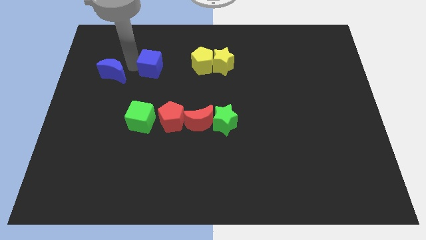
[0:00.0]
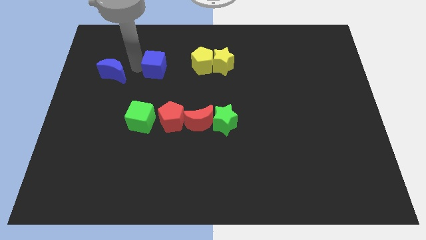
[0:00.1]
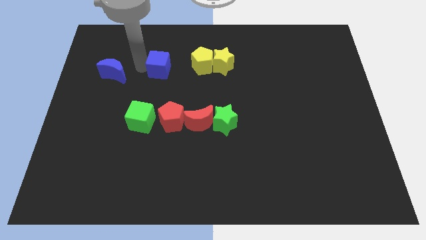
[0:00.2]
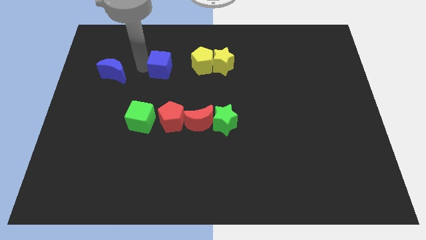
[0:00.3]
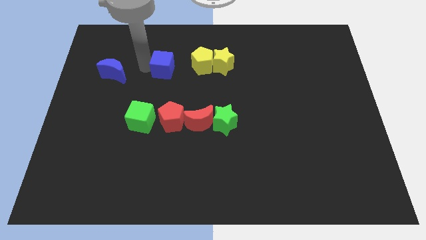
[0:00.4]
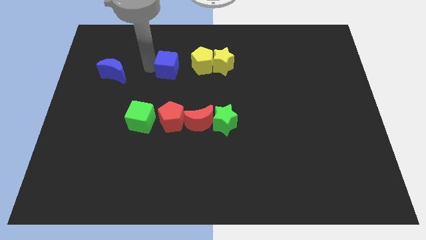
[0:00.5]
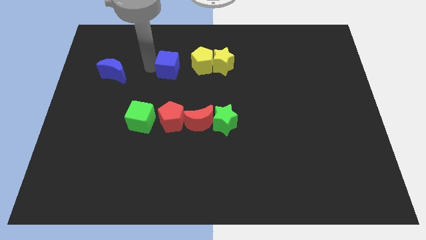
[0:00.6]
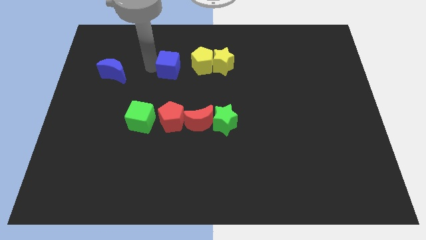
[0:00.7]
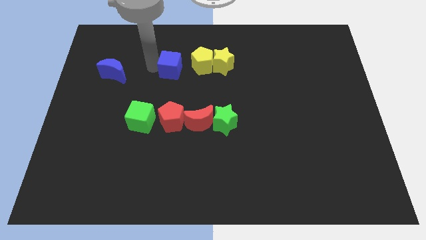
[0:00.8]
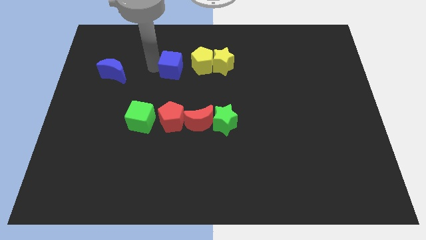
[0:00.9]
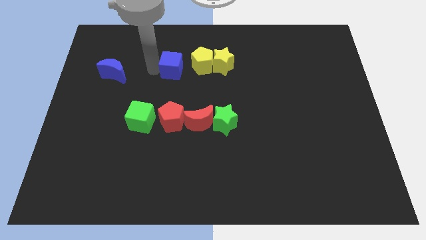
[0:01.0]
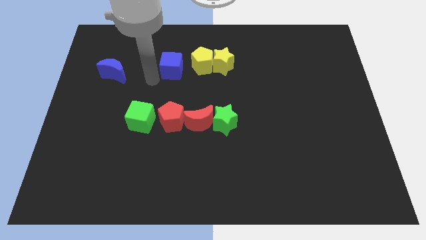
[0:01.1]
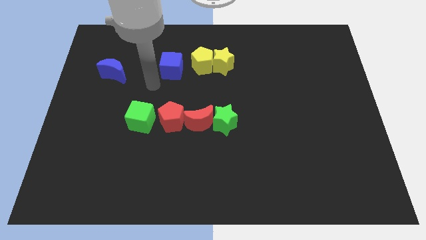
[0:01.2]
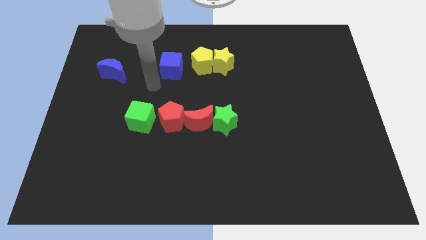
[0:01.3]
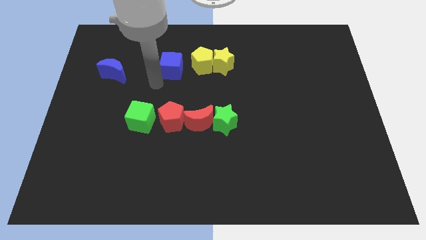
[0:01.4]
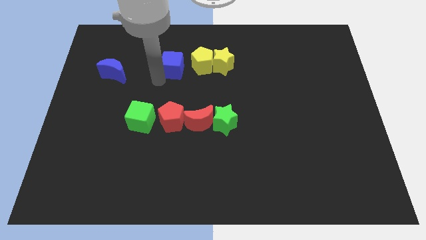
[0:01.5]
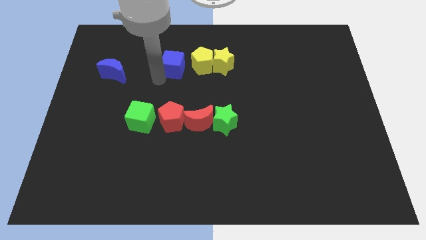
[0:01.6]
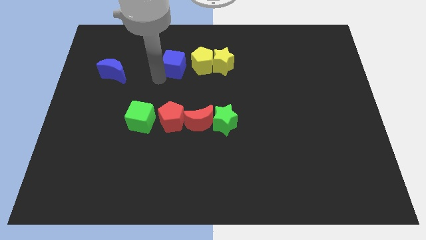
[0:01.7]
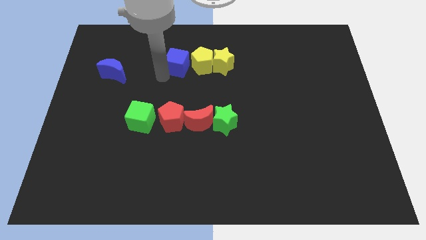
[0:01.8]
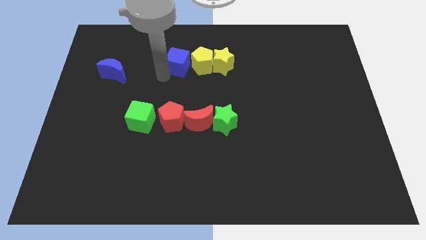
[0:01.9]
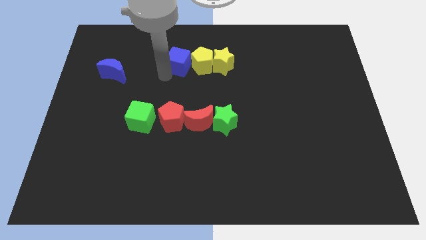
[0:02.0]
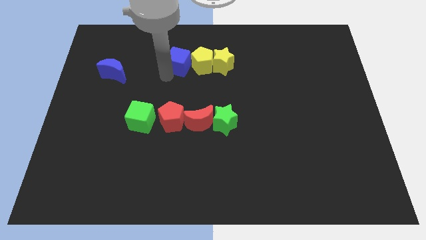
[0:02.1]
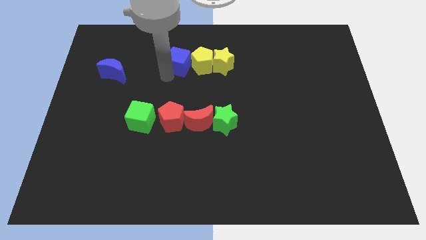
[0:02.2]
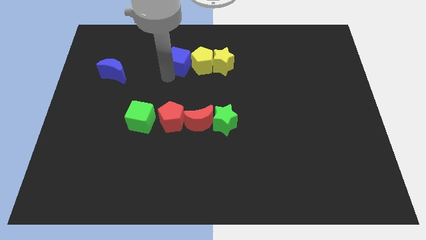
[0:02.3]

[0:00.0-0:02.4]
slide blue cube to the left of the yellow pentagon

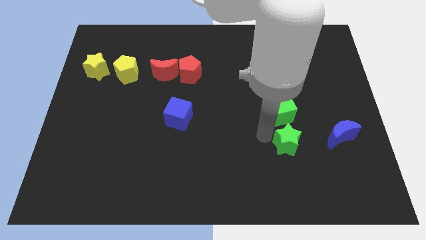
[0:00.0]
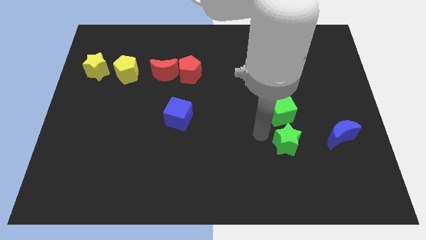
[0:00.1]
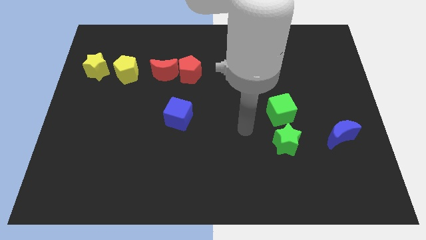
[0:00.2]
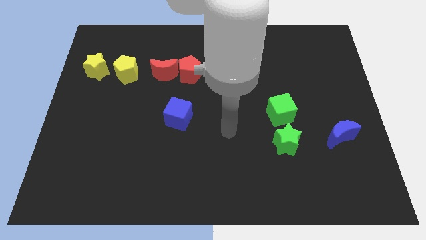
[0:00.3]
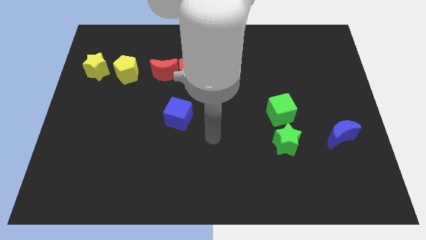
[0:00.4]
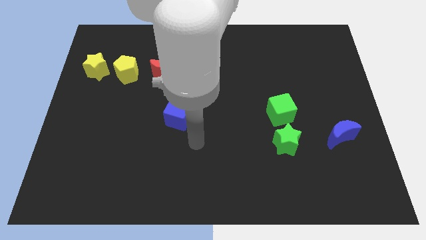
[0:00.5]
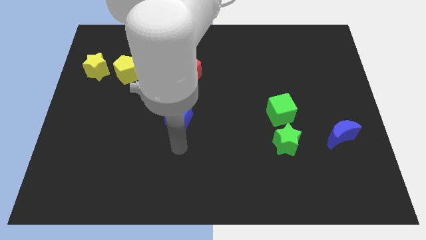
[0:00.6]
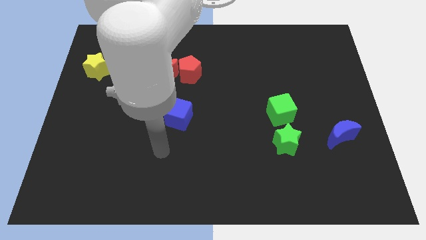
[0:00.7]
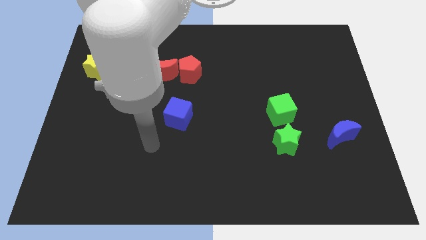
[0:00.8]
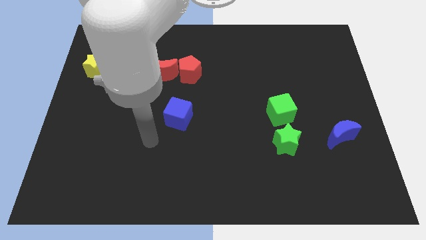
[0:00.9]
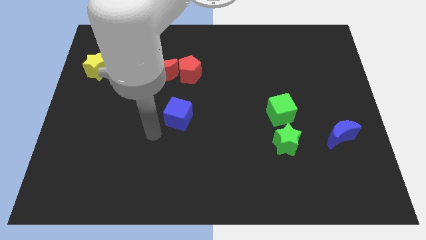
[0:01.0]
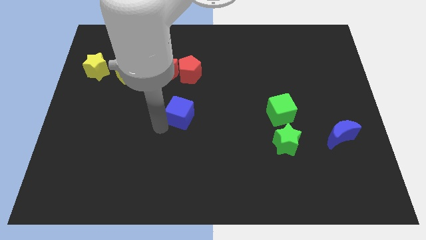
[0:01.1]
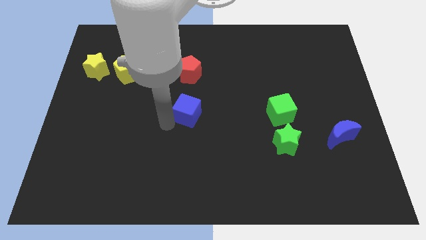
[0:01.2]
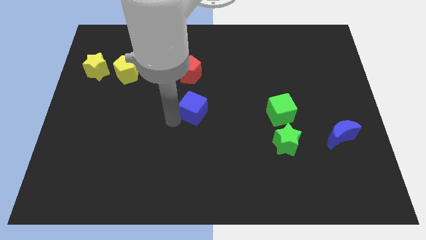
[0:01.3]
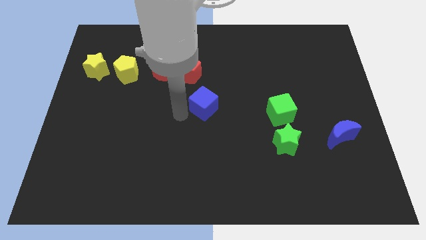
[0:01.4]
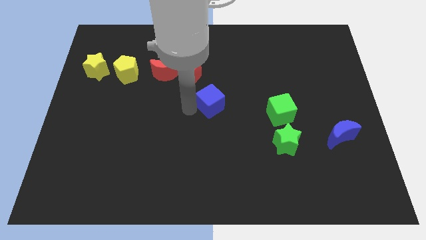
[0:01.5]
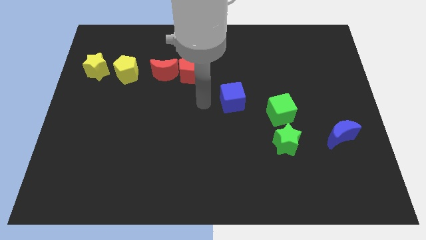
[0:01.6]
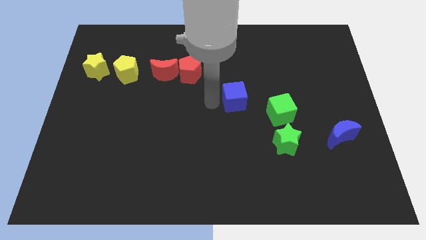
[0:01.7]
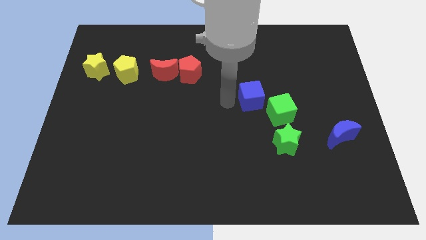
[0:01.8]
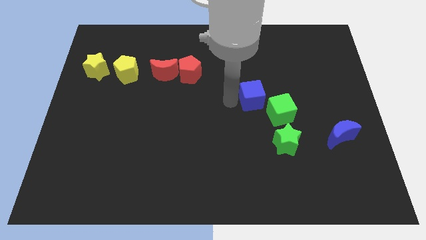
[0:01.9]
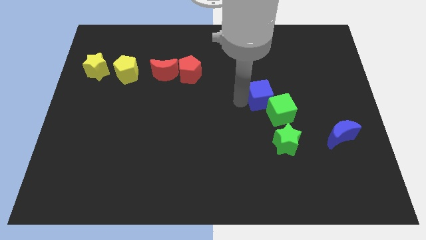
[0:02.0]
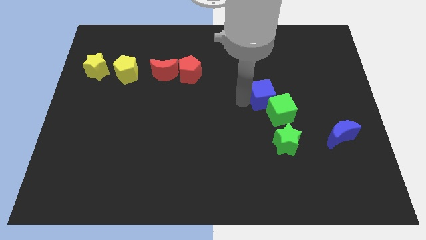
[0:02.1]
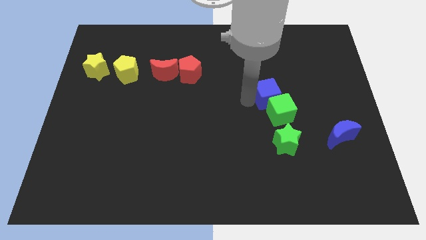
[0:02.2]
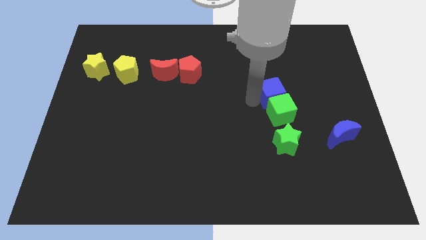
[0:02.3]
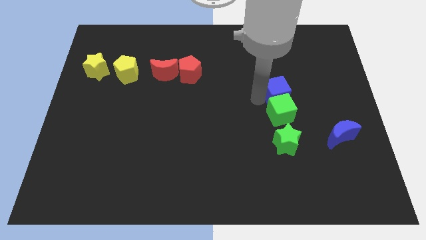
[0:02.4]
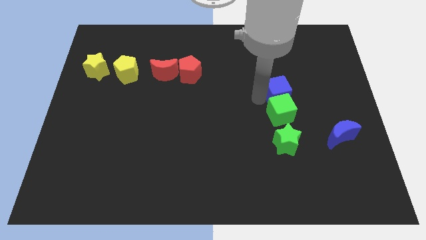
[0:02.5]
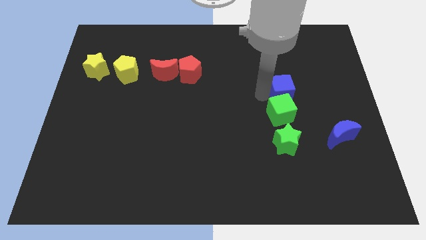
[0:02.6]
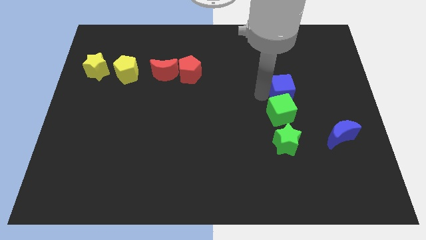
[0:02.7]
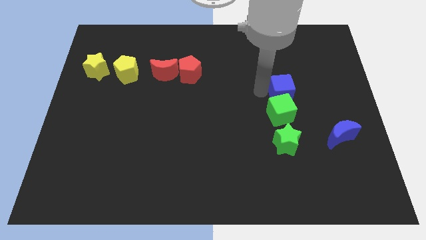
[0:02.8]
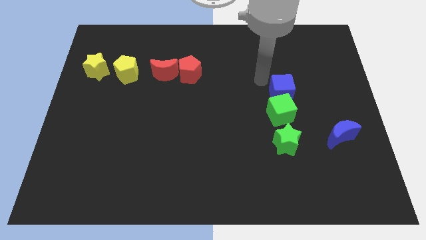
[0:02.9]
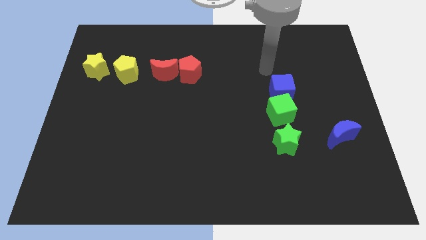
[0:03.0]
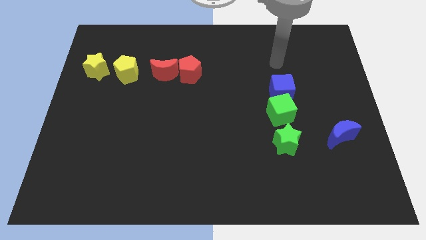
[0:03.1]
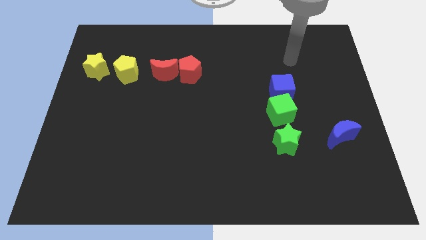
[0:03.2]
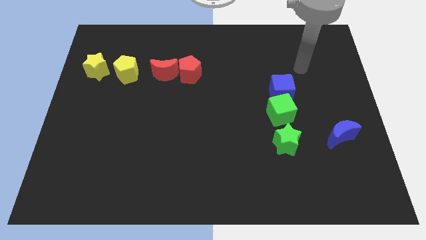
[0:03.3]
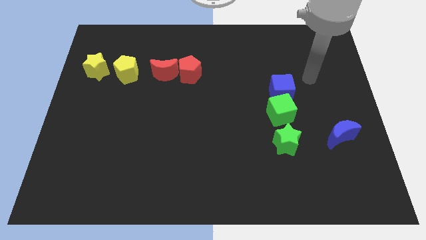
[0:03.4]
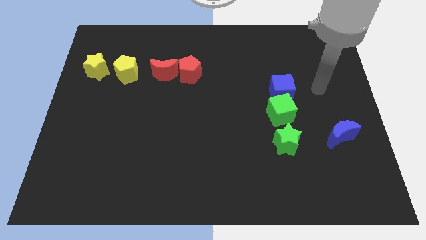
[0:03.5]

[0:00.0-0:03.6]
push the blue cube to the right side of the board

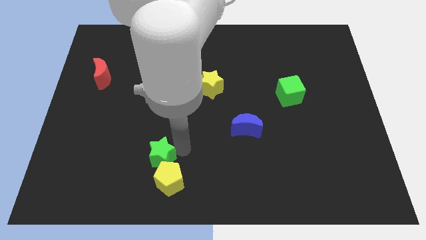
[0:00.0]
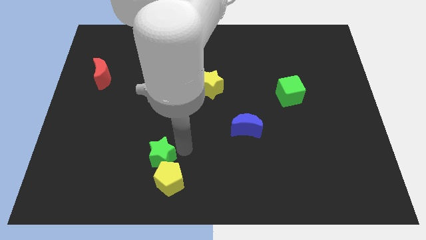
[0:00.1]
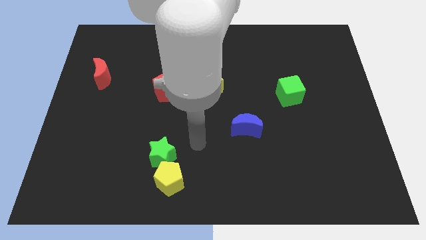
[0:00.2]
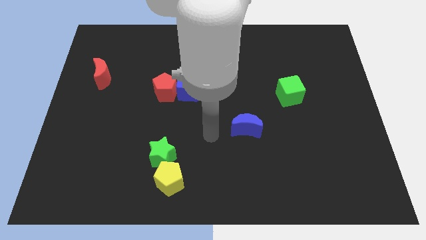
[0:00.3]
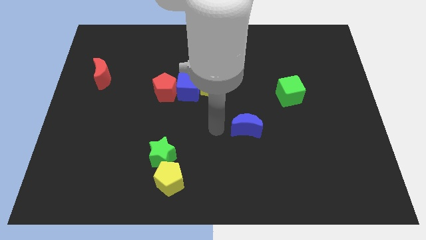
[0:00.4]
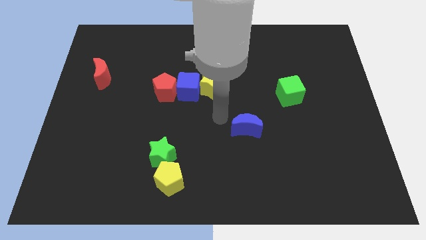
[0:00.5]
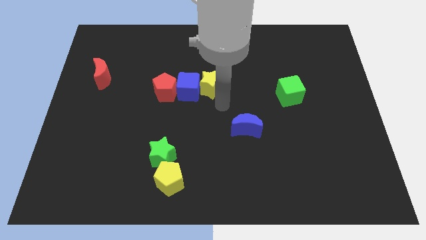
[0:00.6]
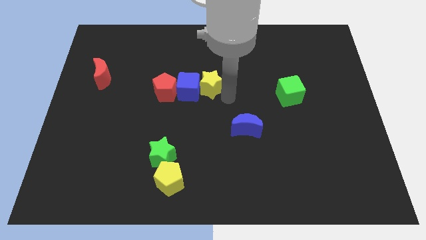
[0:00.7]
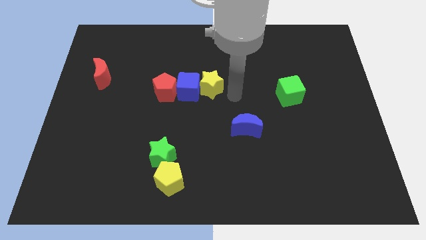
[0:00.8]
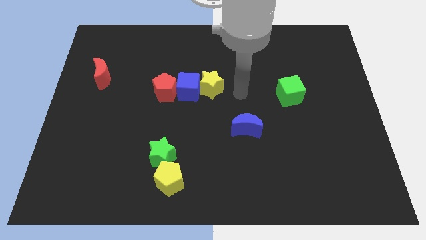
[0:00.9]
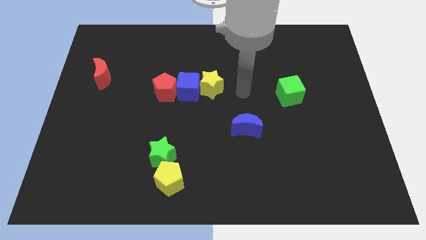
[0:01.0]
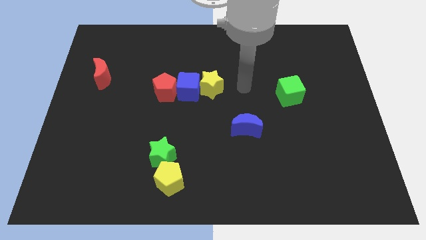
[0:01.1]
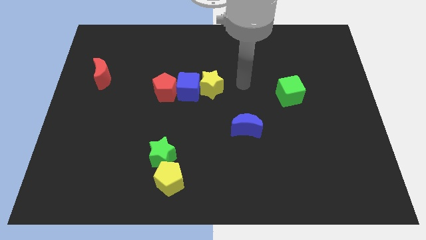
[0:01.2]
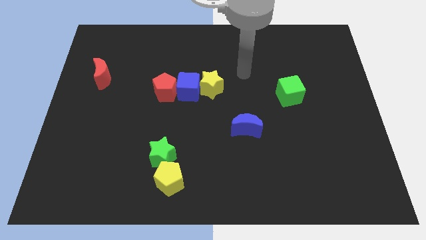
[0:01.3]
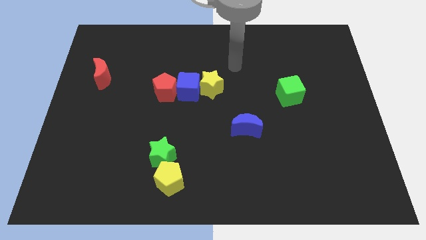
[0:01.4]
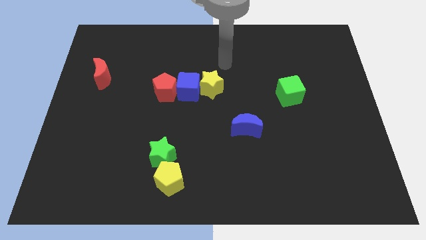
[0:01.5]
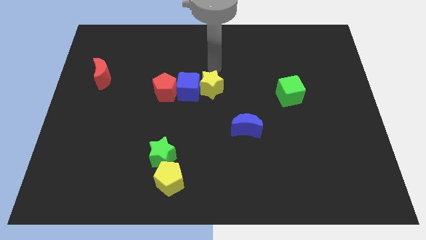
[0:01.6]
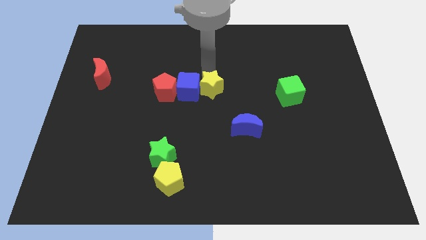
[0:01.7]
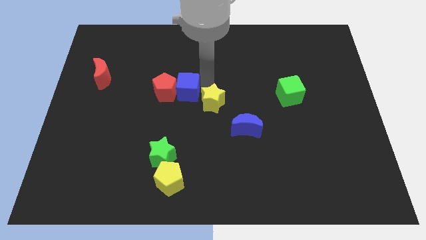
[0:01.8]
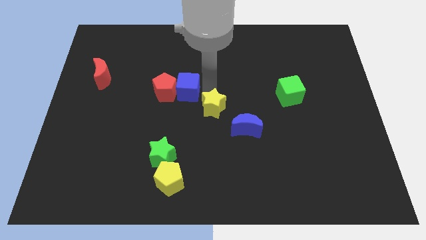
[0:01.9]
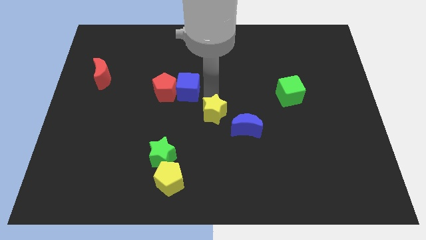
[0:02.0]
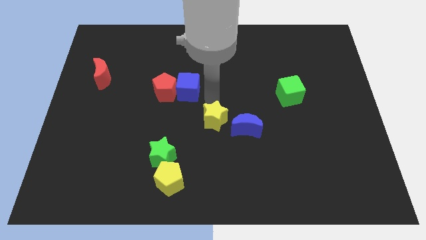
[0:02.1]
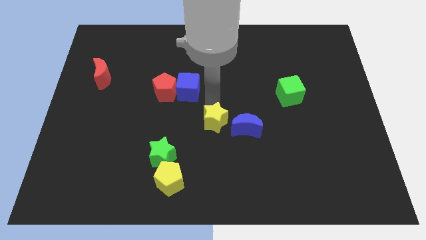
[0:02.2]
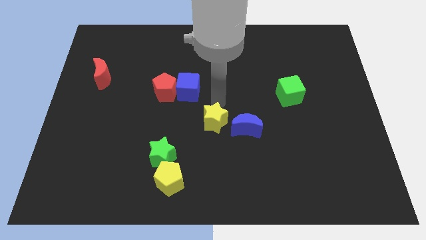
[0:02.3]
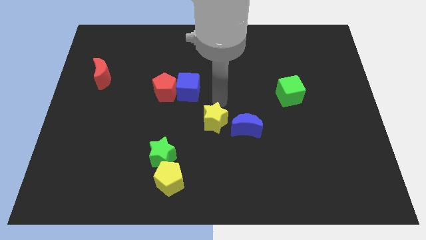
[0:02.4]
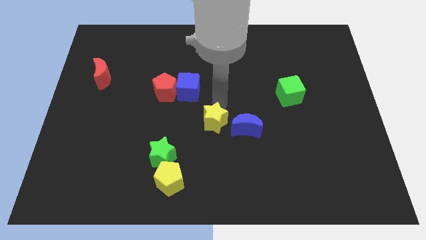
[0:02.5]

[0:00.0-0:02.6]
place yellow star to the center of the board

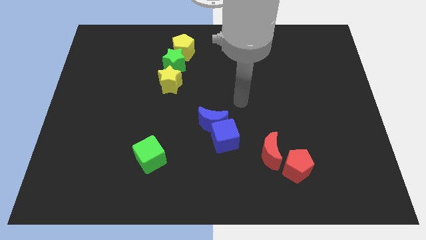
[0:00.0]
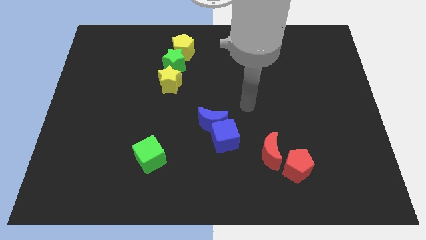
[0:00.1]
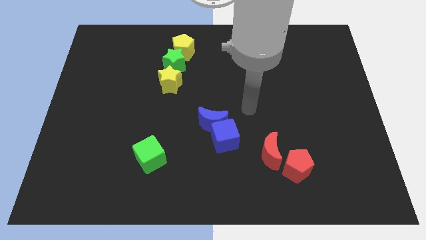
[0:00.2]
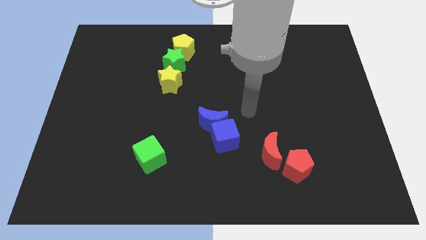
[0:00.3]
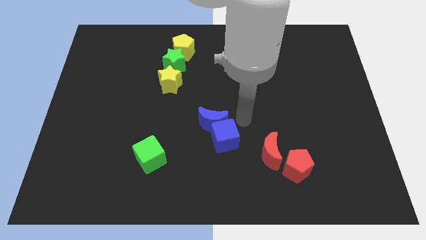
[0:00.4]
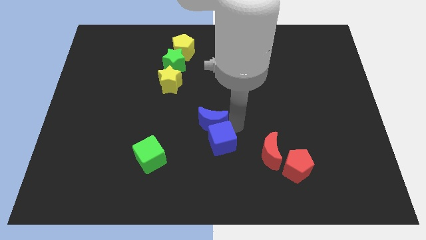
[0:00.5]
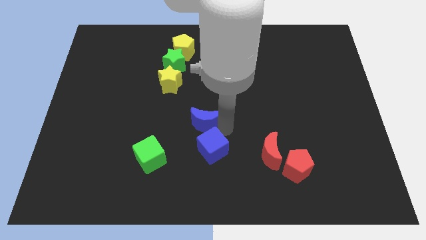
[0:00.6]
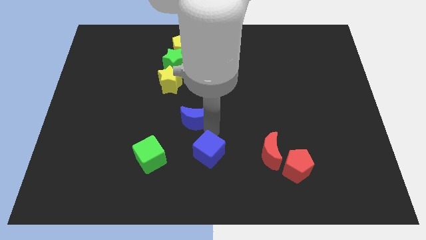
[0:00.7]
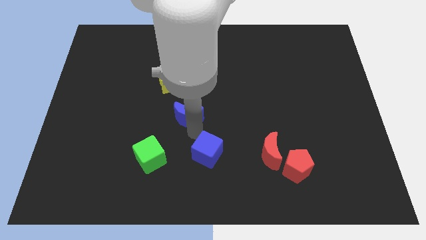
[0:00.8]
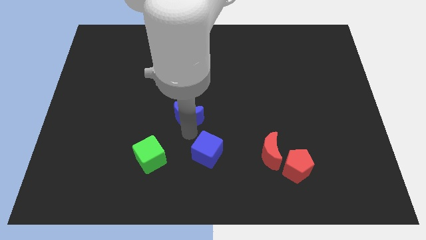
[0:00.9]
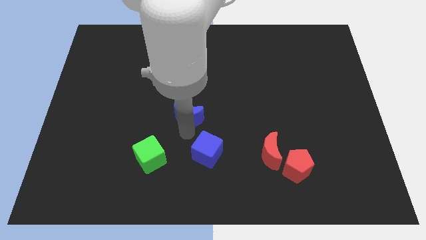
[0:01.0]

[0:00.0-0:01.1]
separate blue crescent from the blue cube
